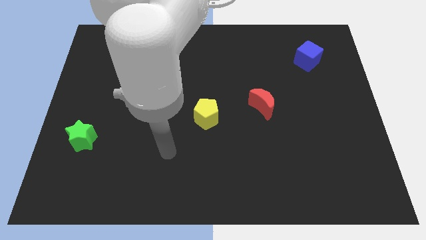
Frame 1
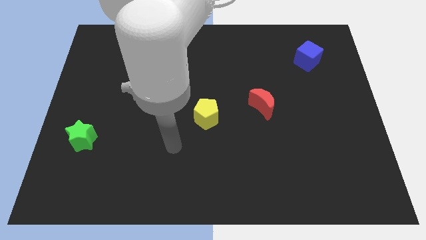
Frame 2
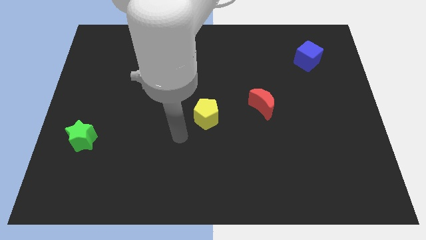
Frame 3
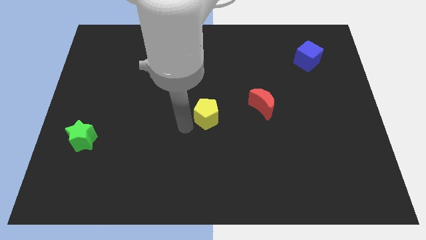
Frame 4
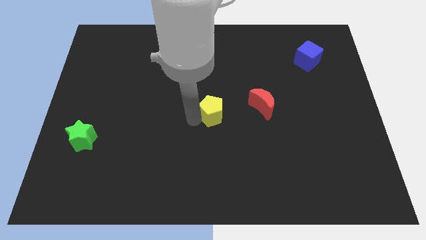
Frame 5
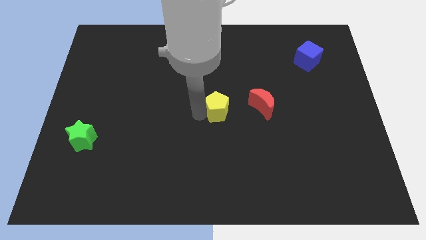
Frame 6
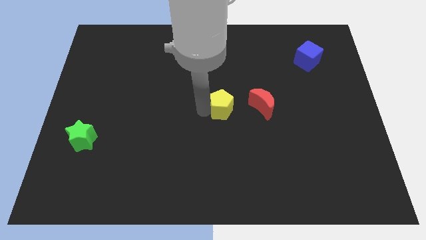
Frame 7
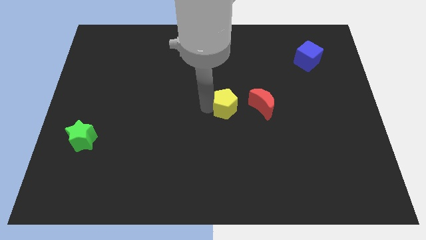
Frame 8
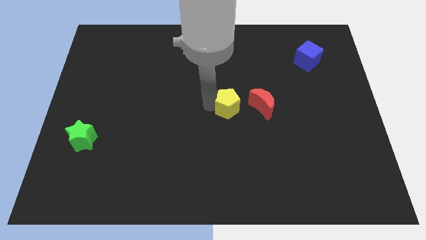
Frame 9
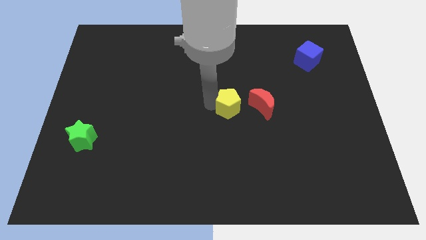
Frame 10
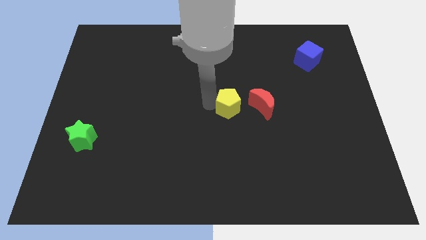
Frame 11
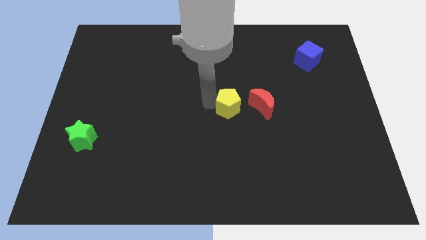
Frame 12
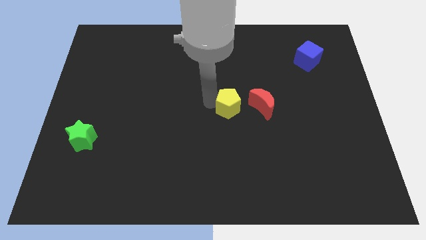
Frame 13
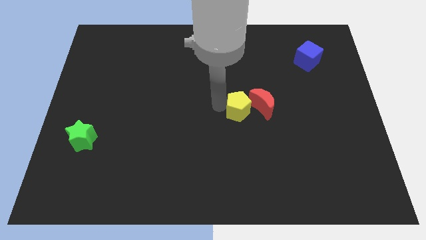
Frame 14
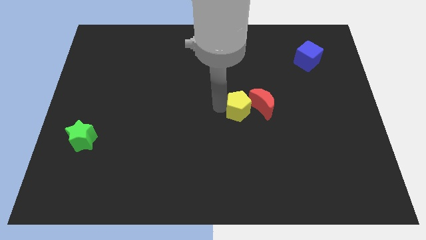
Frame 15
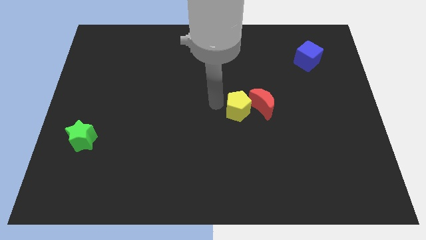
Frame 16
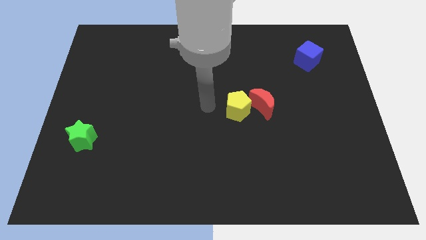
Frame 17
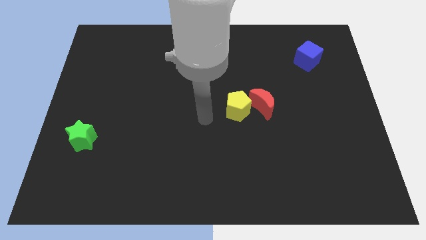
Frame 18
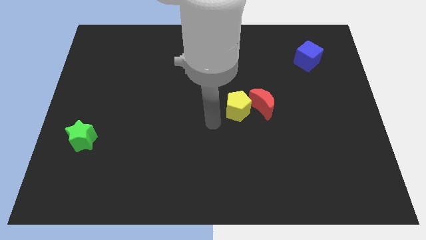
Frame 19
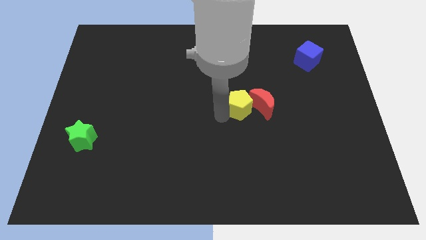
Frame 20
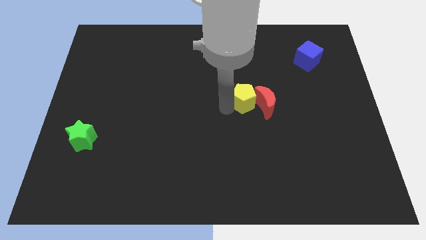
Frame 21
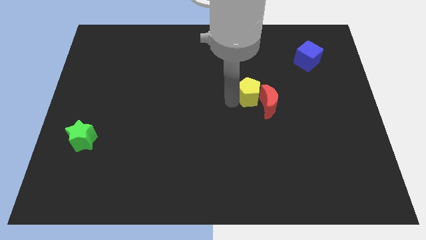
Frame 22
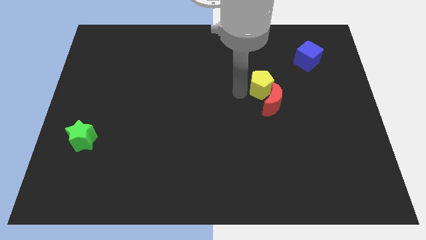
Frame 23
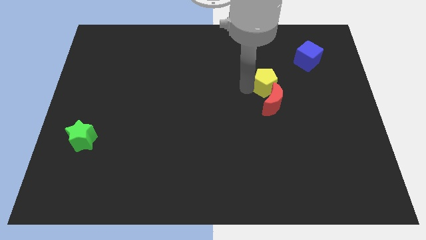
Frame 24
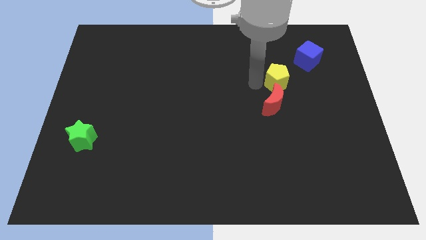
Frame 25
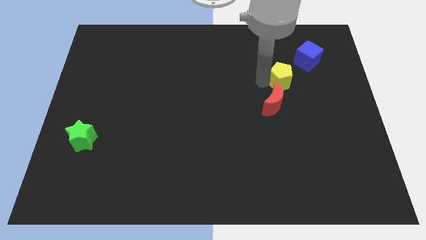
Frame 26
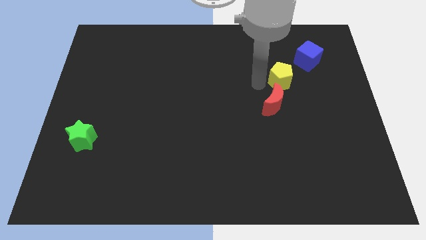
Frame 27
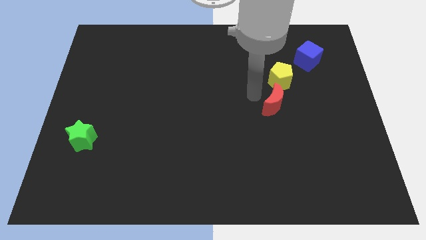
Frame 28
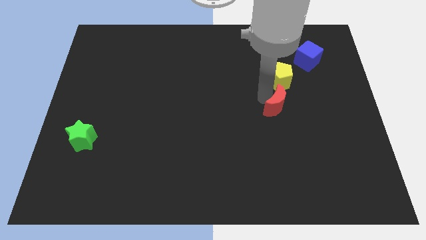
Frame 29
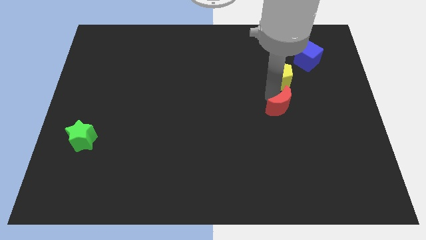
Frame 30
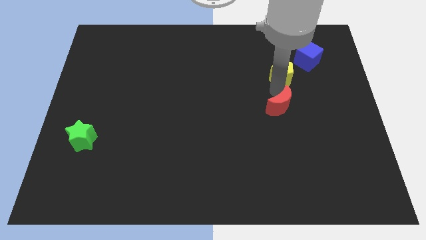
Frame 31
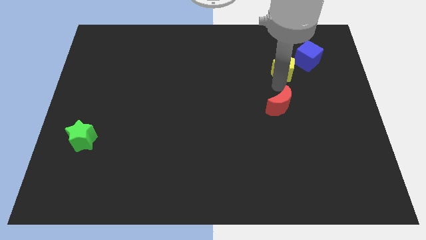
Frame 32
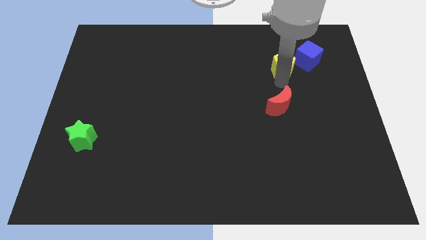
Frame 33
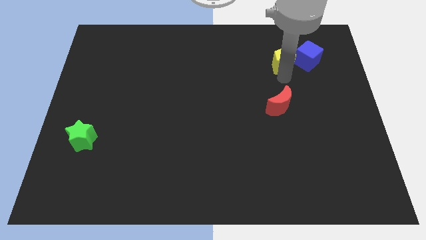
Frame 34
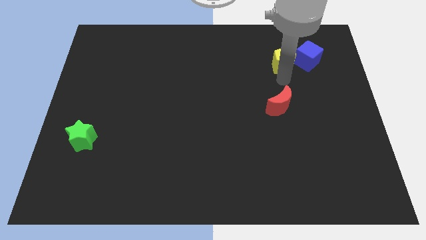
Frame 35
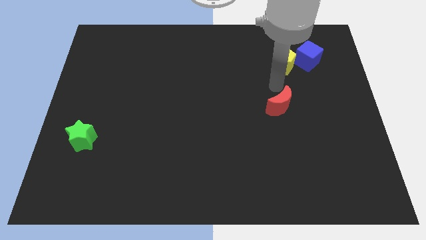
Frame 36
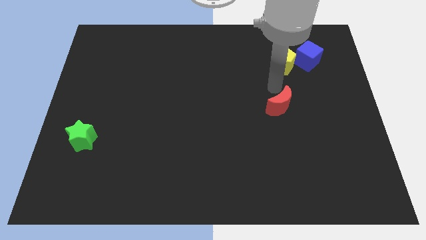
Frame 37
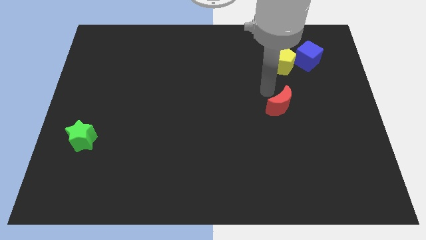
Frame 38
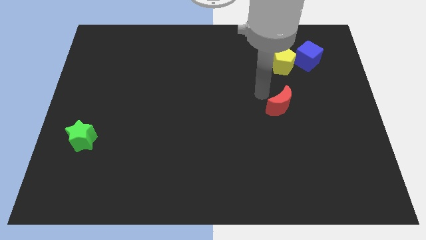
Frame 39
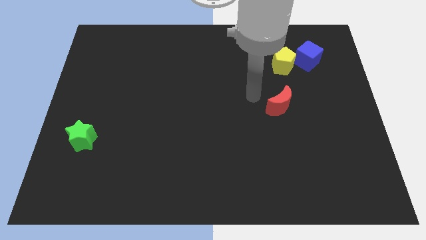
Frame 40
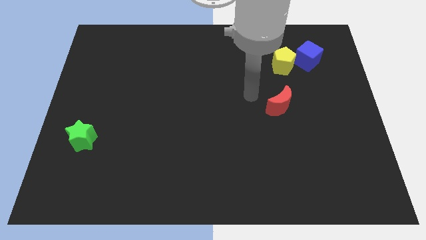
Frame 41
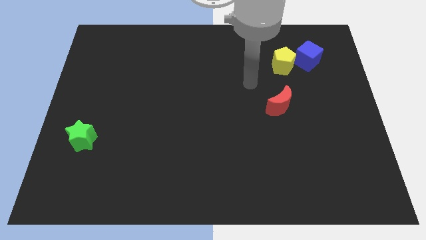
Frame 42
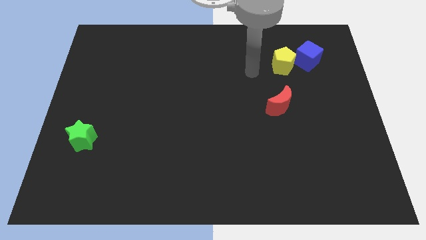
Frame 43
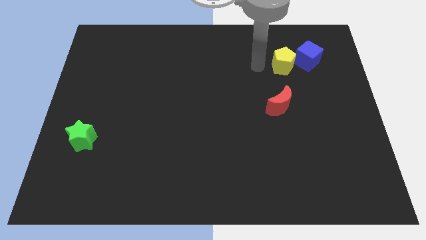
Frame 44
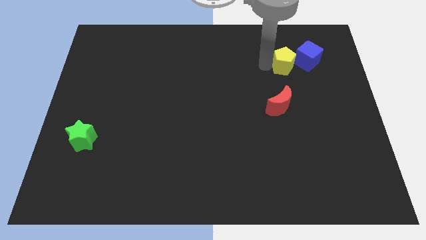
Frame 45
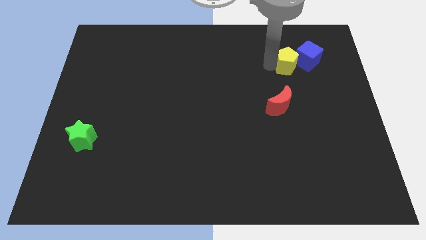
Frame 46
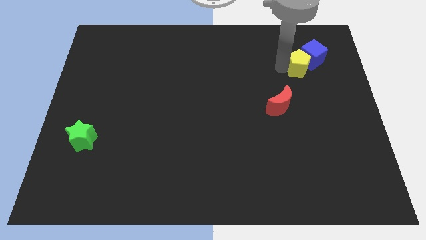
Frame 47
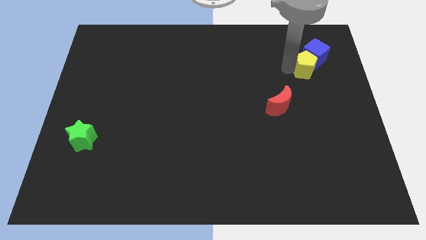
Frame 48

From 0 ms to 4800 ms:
push the yellow pentagon close to the blue cube

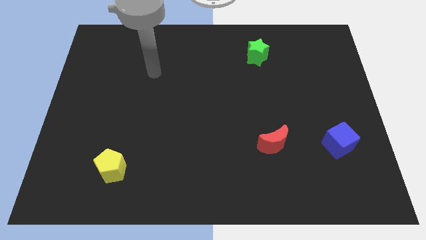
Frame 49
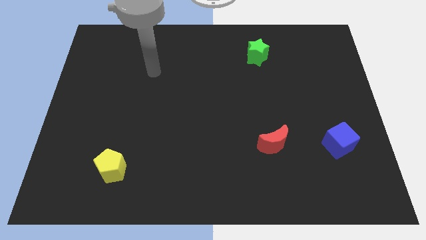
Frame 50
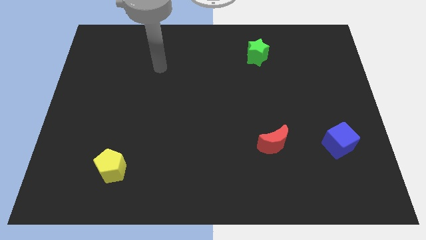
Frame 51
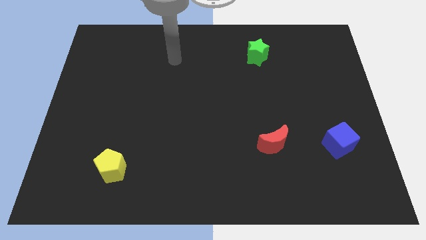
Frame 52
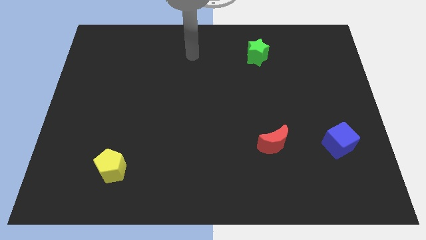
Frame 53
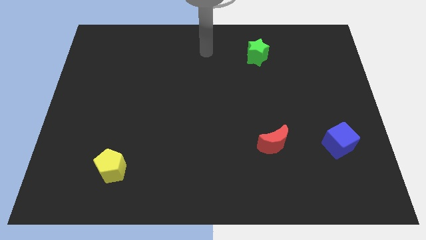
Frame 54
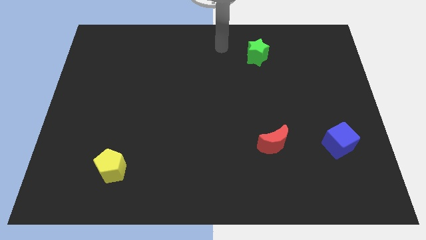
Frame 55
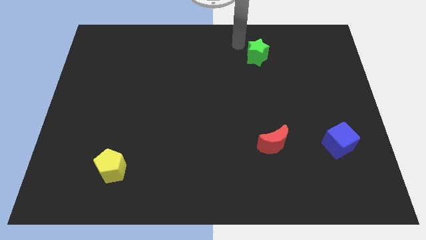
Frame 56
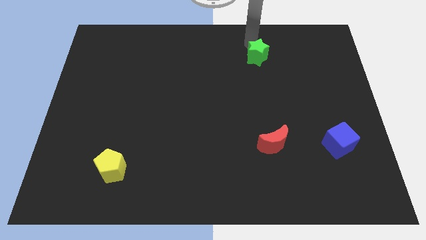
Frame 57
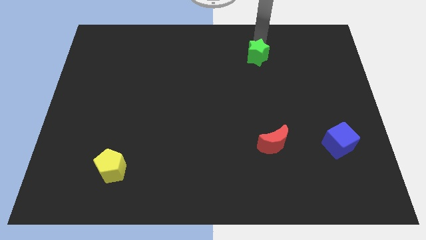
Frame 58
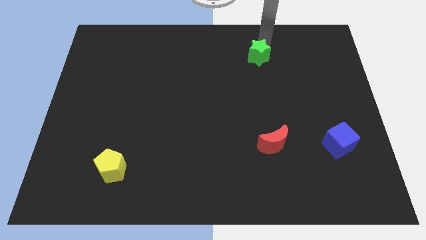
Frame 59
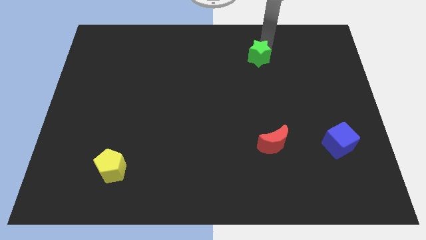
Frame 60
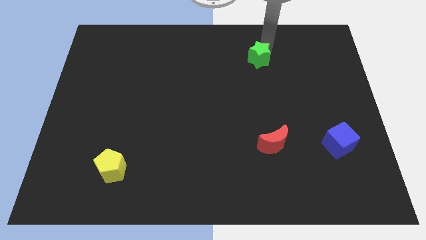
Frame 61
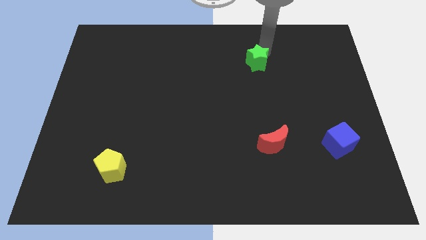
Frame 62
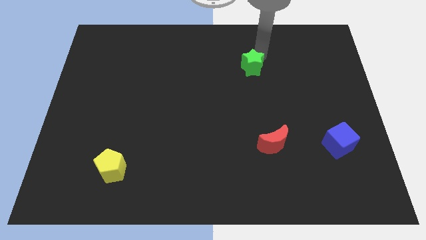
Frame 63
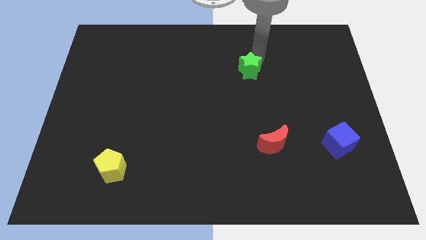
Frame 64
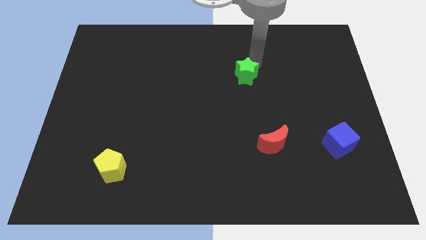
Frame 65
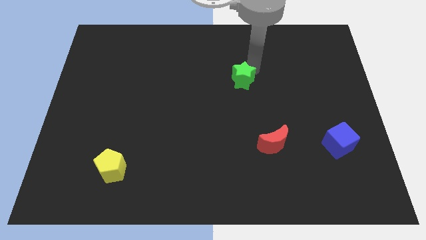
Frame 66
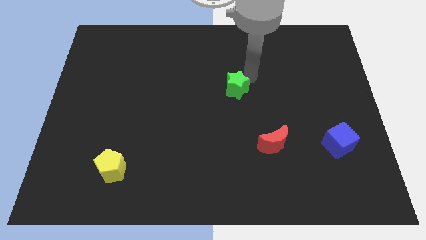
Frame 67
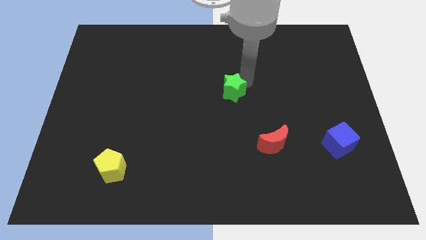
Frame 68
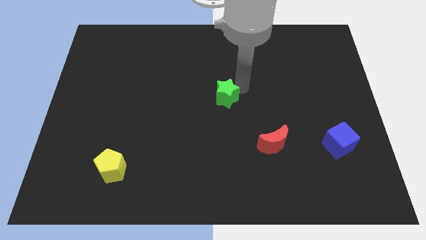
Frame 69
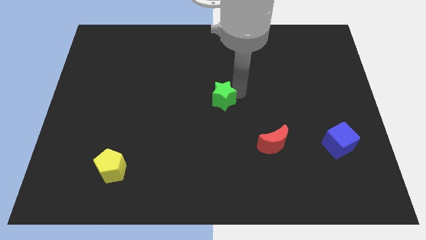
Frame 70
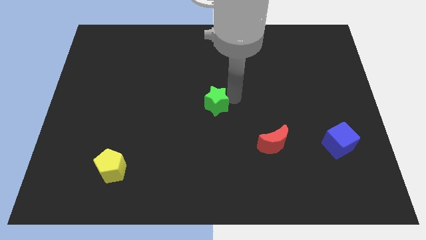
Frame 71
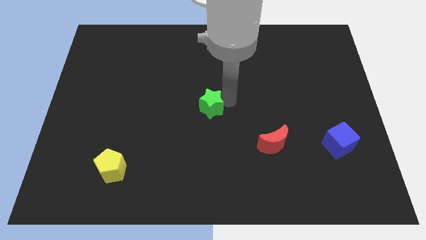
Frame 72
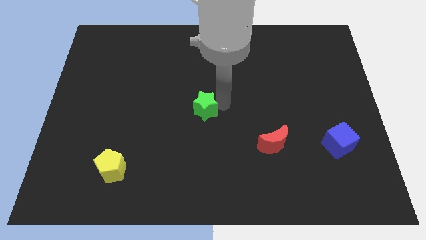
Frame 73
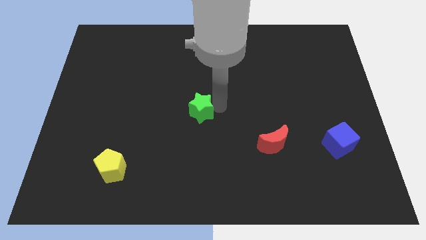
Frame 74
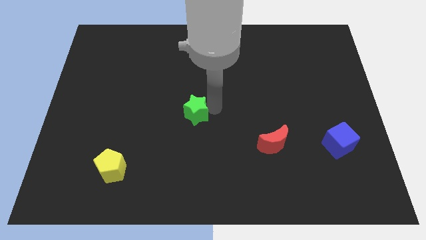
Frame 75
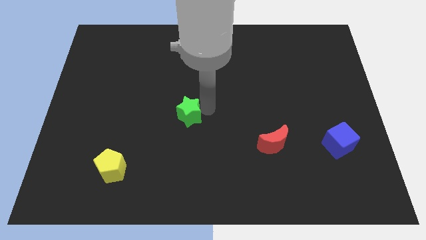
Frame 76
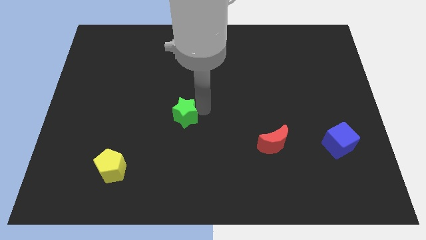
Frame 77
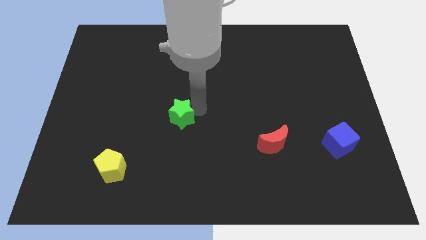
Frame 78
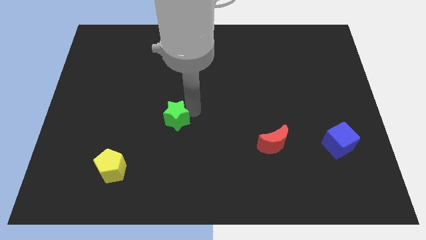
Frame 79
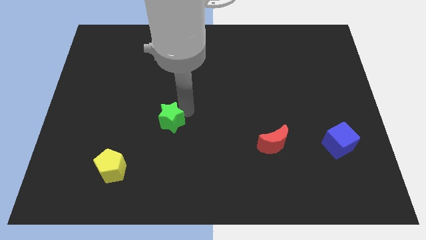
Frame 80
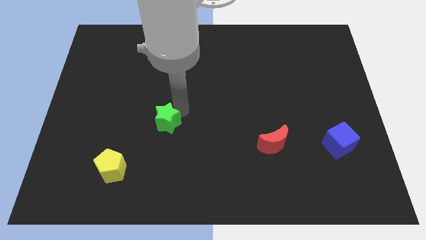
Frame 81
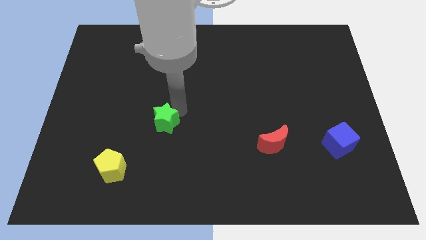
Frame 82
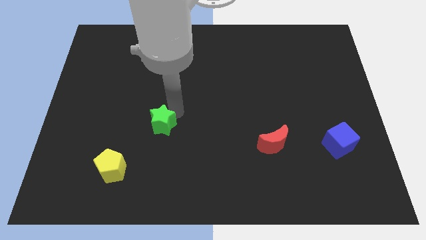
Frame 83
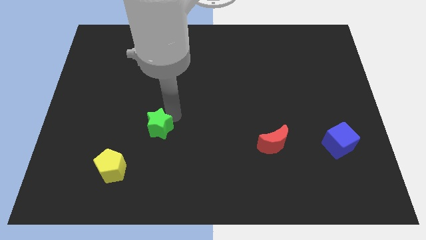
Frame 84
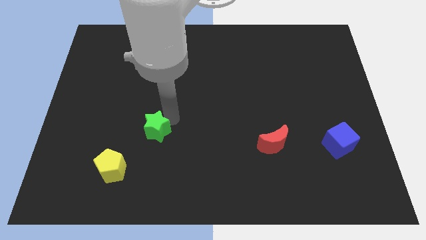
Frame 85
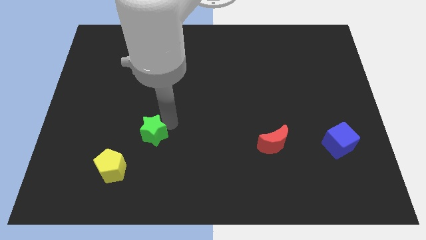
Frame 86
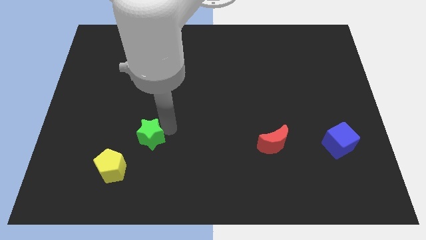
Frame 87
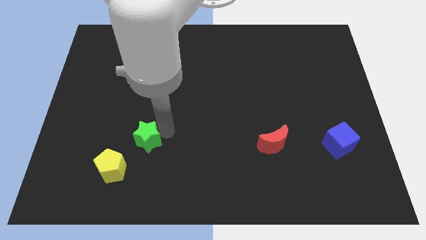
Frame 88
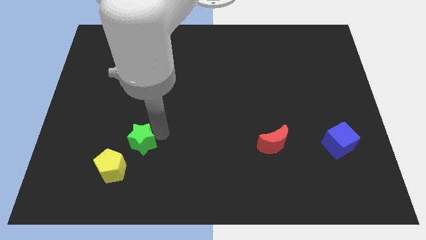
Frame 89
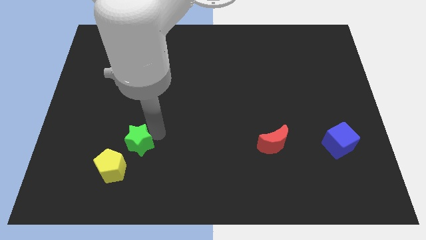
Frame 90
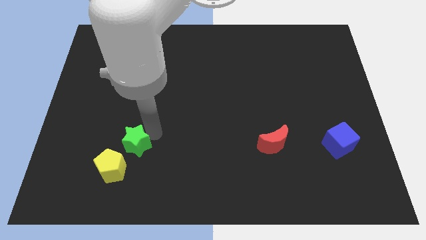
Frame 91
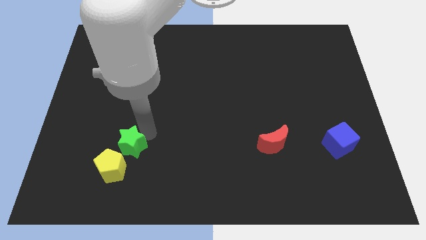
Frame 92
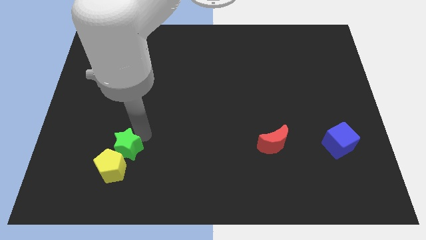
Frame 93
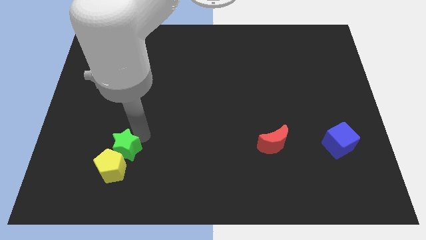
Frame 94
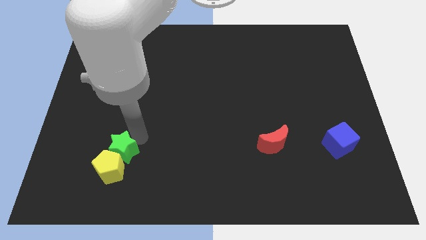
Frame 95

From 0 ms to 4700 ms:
put the star next to the yellow pentagon
